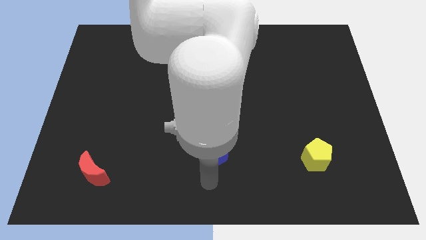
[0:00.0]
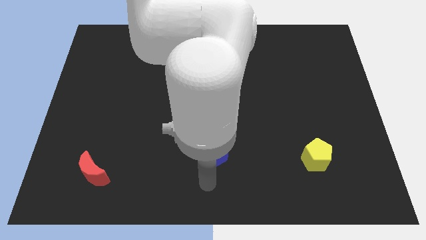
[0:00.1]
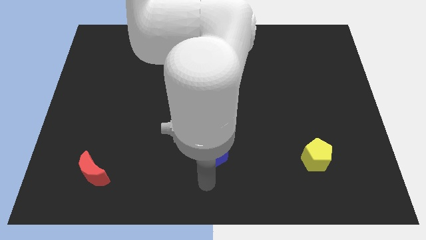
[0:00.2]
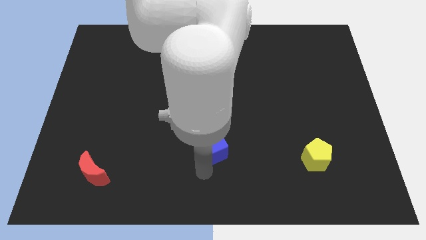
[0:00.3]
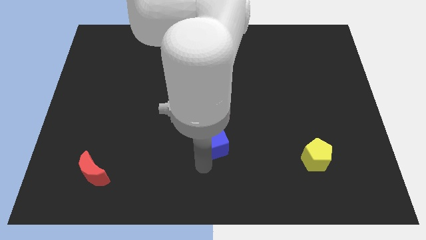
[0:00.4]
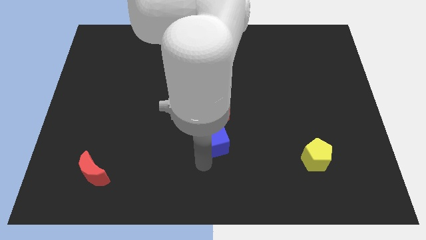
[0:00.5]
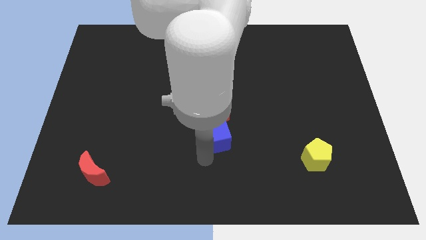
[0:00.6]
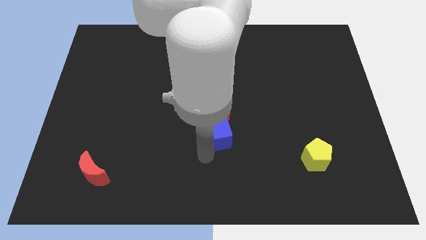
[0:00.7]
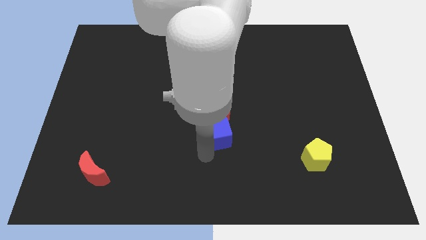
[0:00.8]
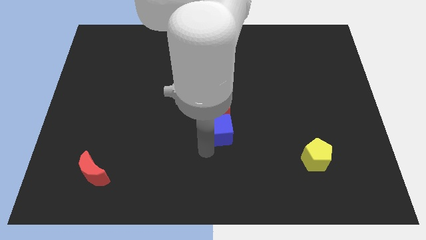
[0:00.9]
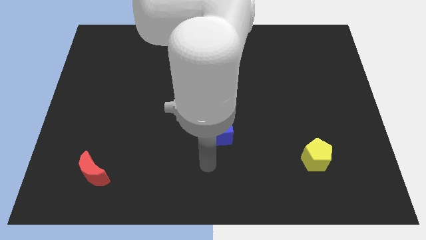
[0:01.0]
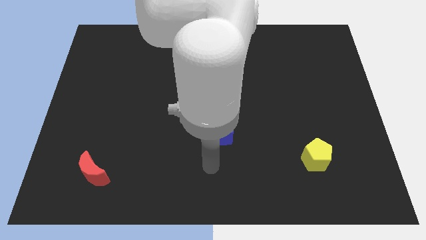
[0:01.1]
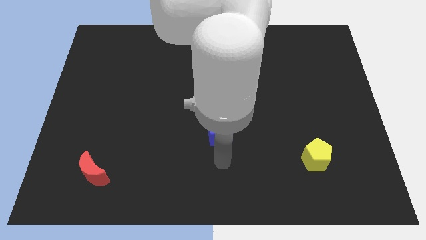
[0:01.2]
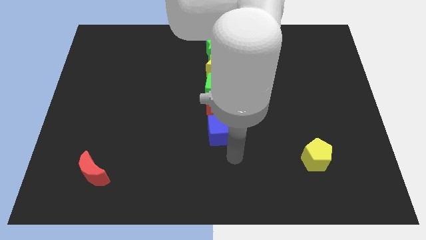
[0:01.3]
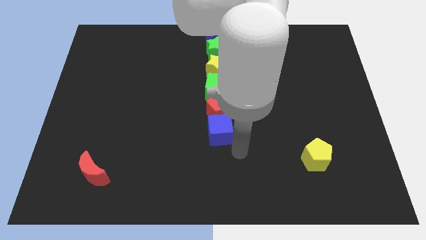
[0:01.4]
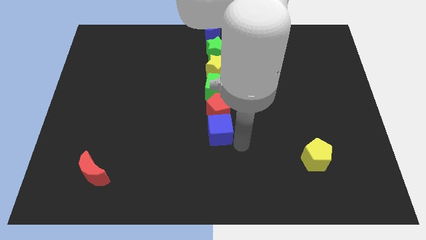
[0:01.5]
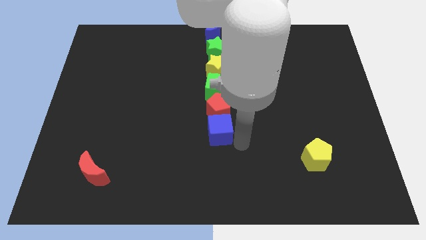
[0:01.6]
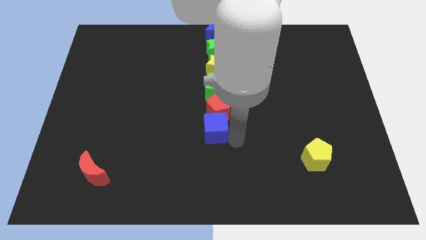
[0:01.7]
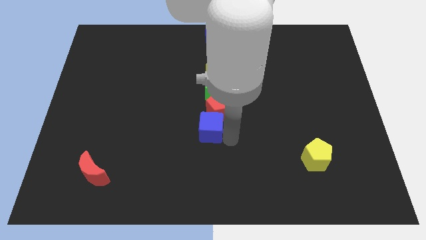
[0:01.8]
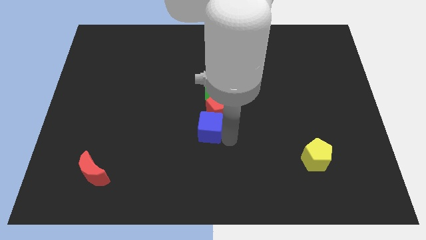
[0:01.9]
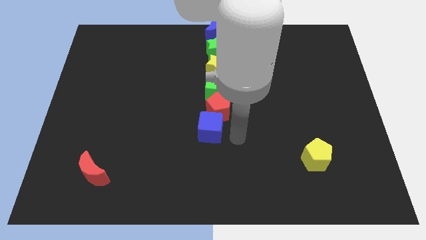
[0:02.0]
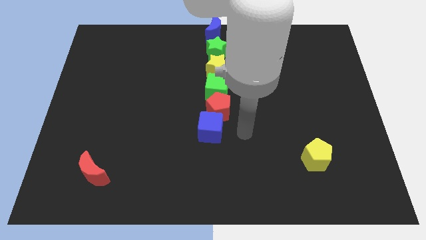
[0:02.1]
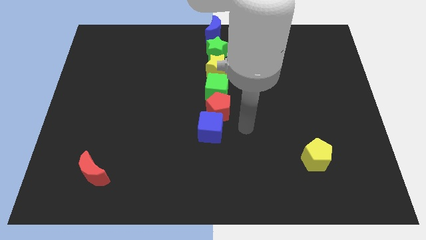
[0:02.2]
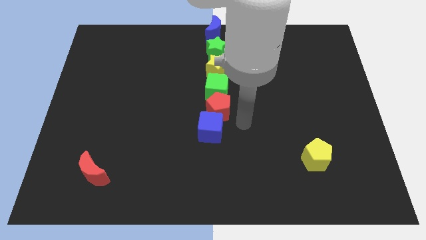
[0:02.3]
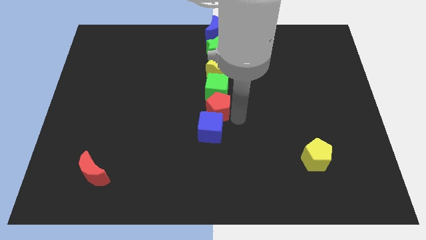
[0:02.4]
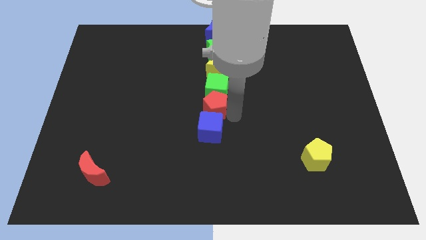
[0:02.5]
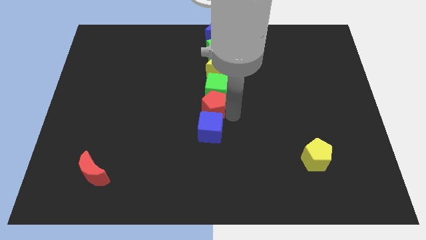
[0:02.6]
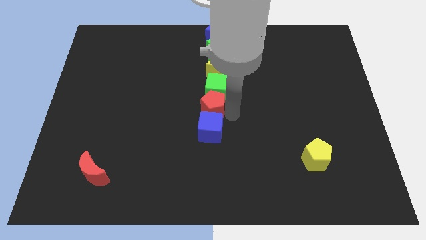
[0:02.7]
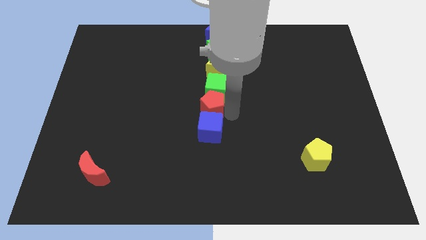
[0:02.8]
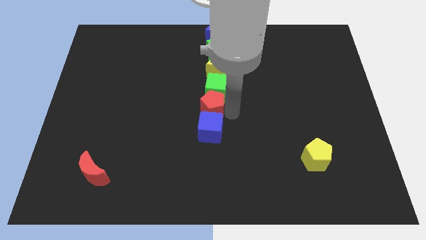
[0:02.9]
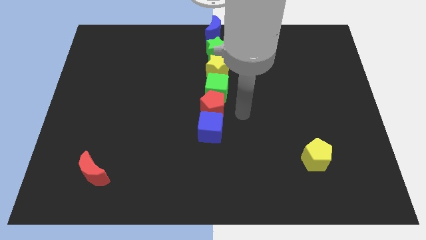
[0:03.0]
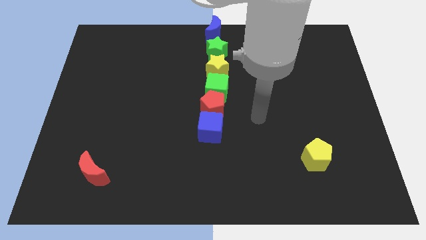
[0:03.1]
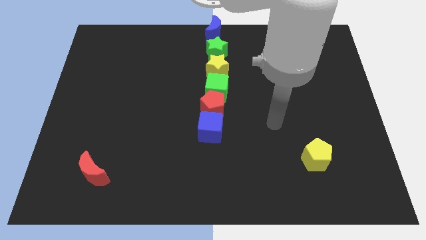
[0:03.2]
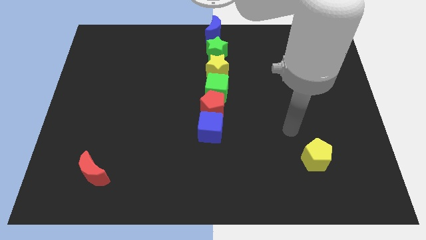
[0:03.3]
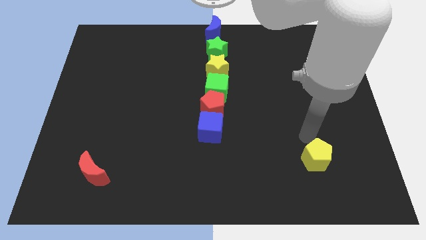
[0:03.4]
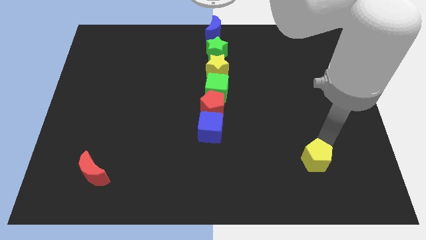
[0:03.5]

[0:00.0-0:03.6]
adjust the red pentagon and blue cube to form a vertical line of blocks

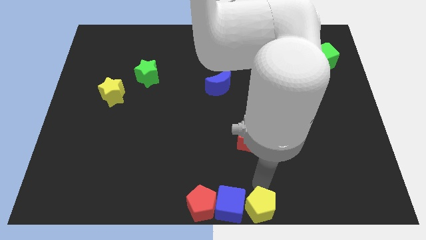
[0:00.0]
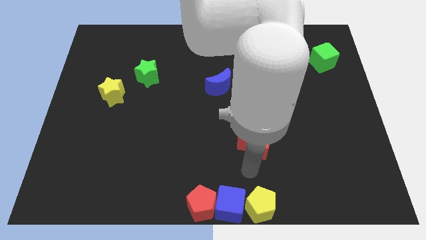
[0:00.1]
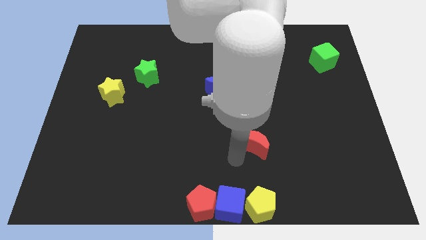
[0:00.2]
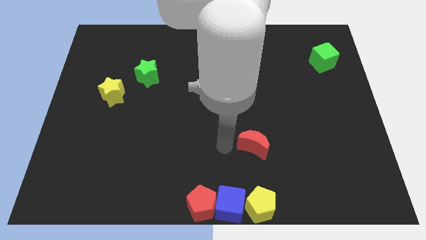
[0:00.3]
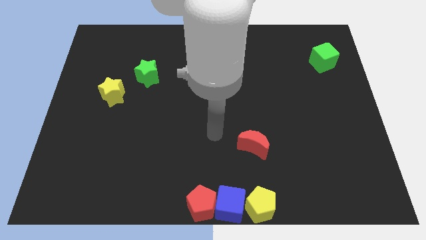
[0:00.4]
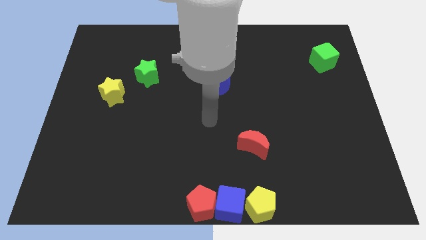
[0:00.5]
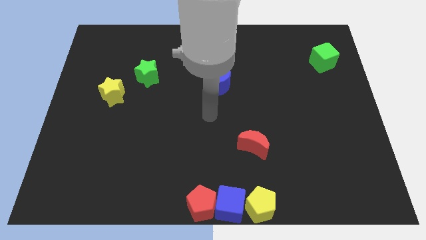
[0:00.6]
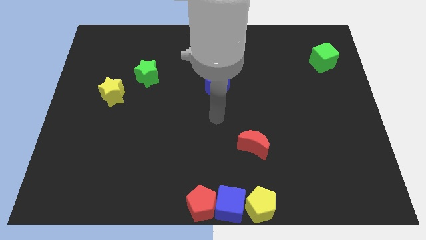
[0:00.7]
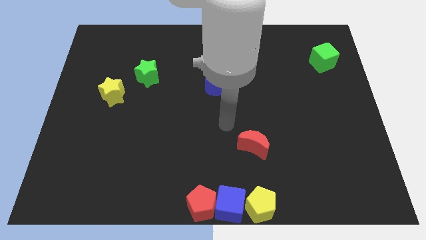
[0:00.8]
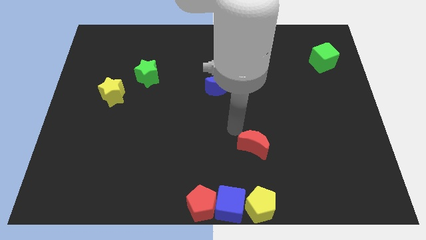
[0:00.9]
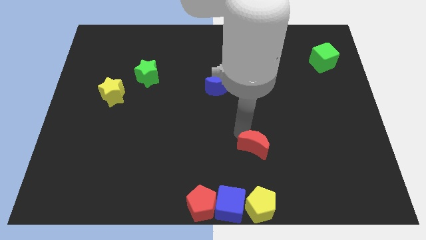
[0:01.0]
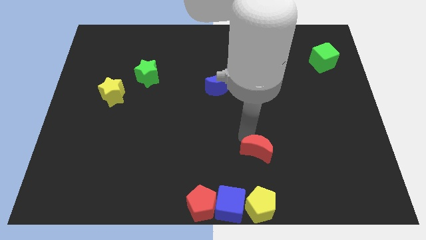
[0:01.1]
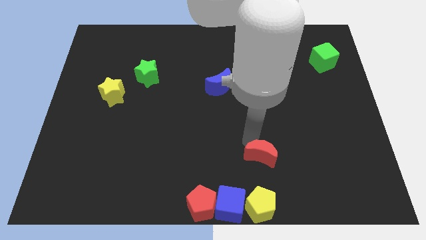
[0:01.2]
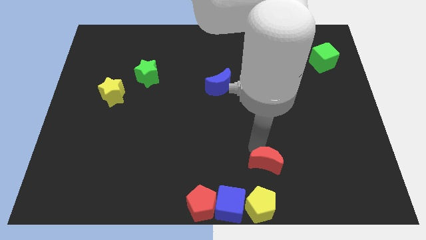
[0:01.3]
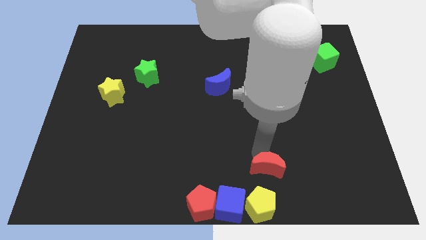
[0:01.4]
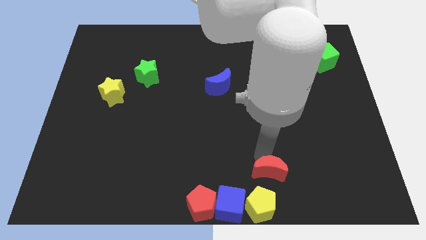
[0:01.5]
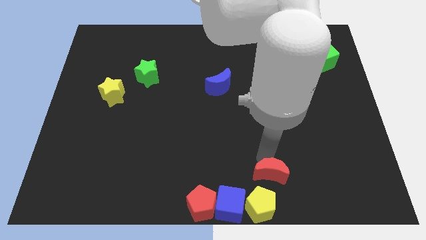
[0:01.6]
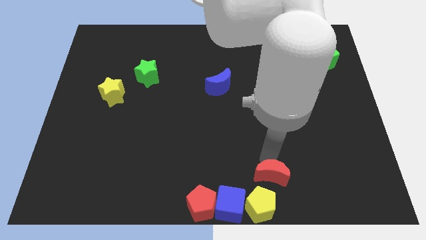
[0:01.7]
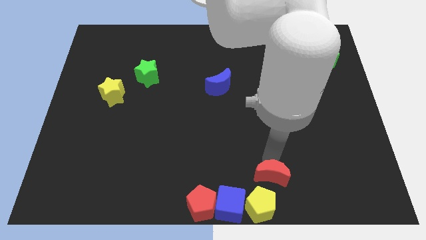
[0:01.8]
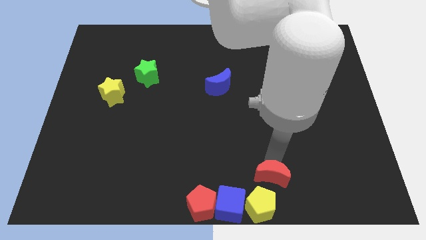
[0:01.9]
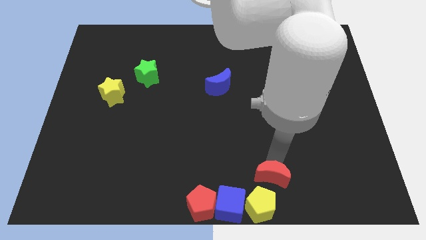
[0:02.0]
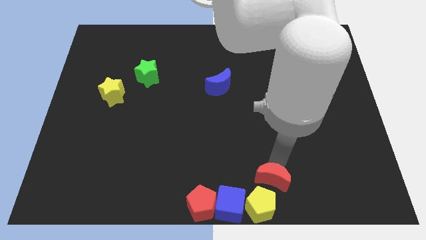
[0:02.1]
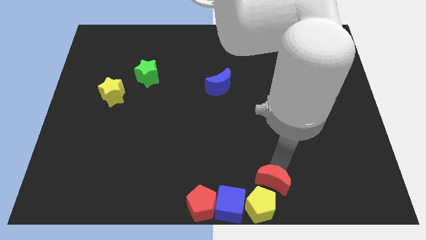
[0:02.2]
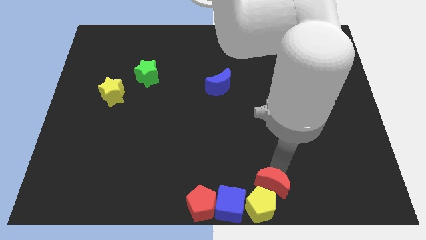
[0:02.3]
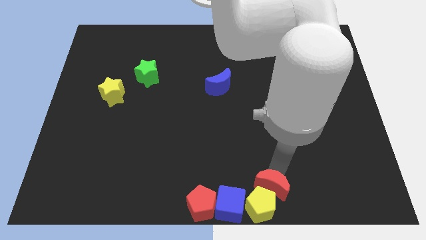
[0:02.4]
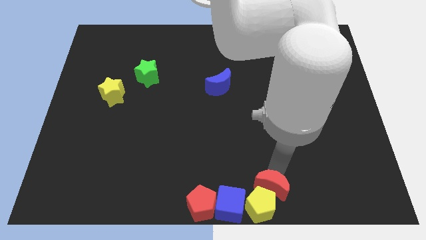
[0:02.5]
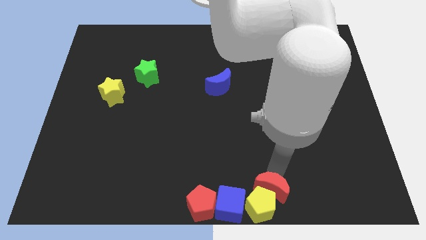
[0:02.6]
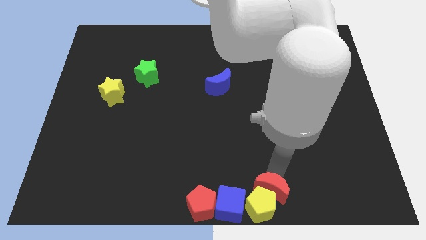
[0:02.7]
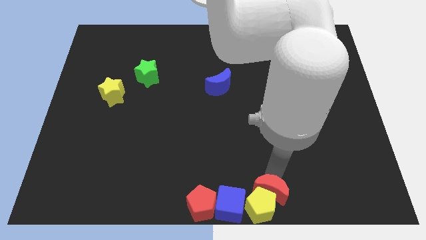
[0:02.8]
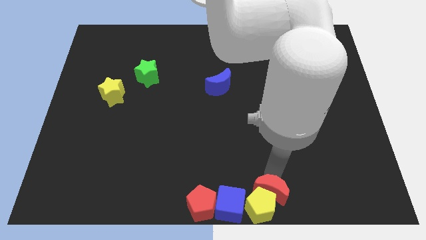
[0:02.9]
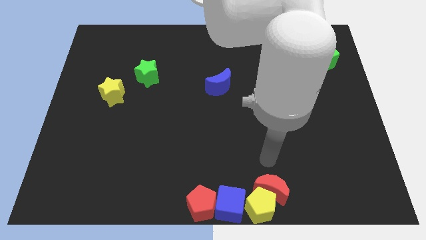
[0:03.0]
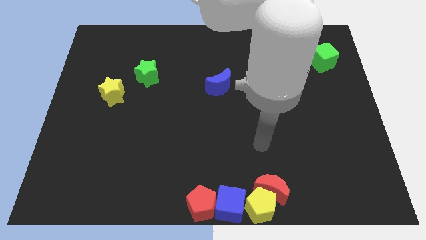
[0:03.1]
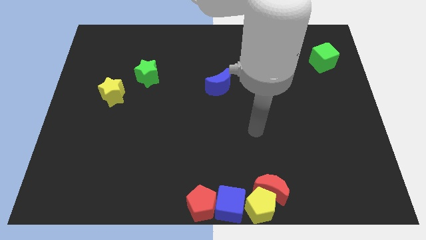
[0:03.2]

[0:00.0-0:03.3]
move the red crescent into the yellow pentagon

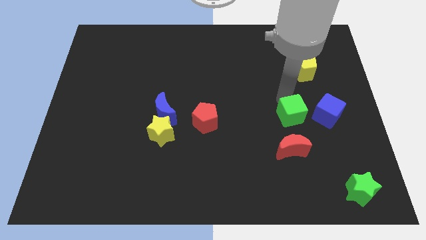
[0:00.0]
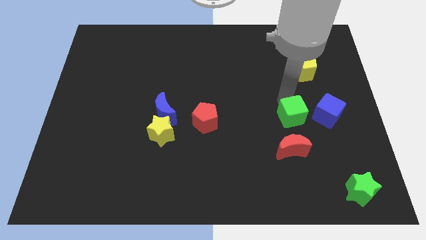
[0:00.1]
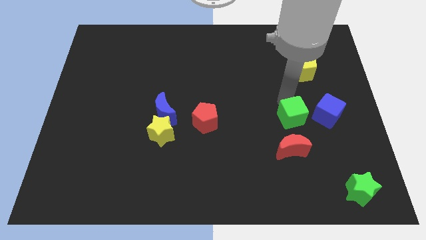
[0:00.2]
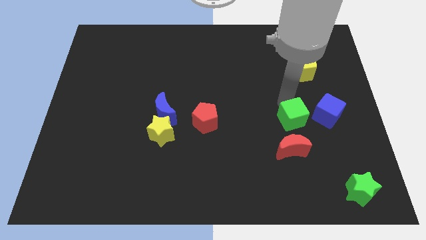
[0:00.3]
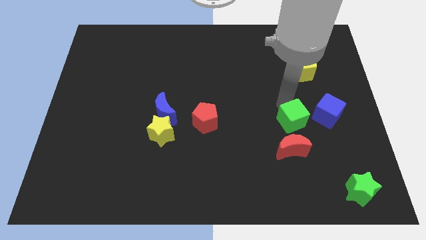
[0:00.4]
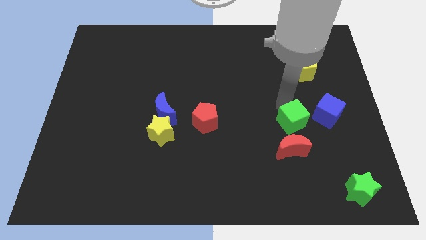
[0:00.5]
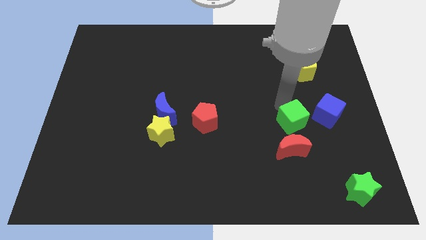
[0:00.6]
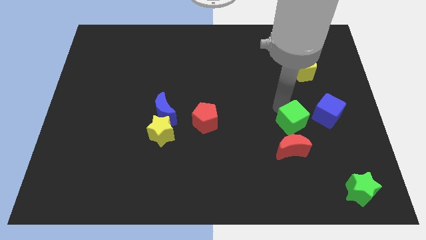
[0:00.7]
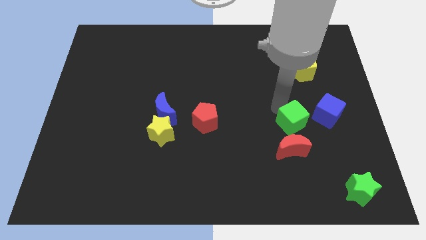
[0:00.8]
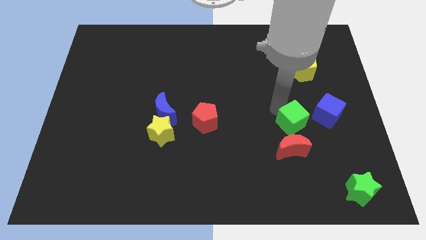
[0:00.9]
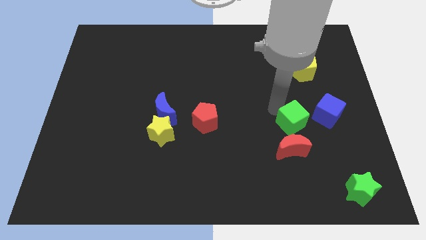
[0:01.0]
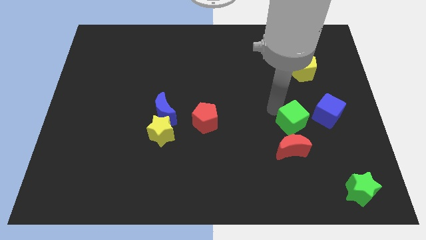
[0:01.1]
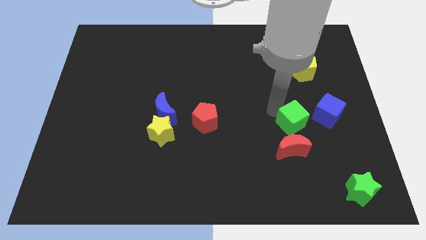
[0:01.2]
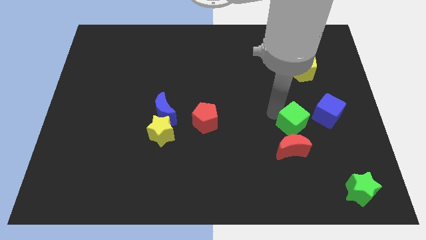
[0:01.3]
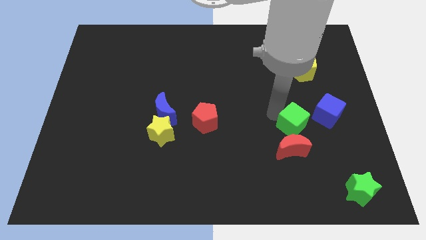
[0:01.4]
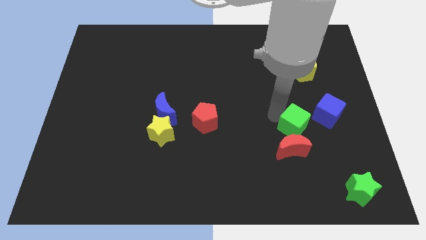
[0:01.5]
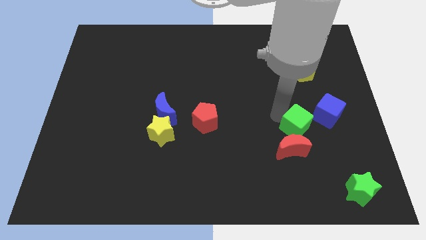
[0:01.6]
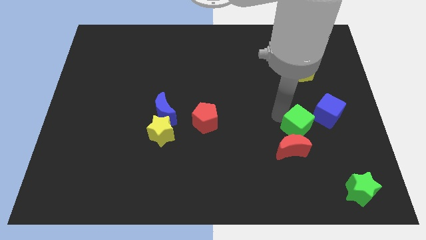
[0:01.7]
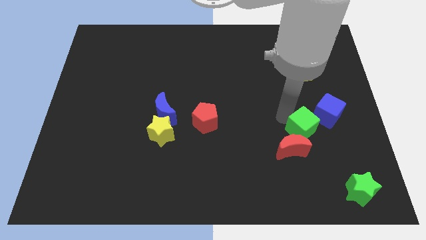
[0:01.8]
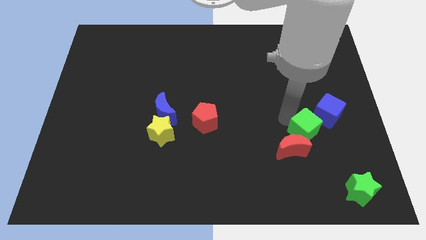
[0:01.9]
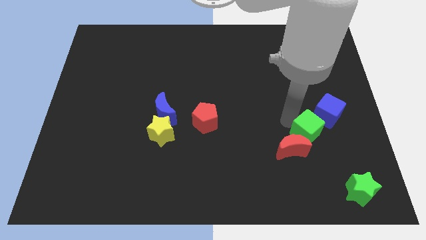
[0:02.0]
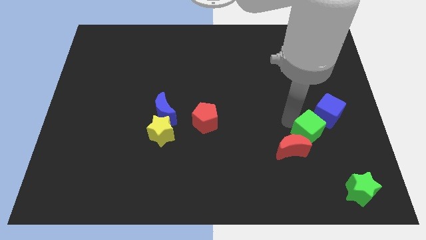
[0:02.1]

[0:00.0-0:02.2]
place green cube in between blue cube and red moon
